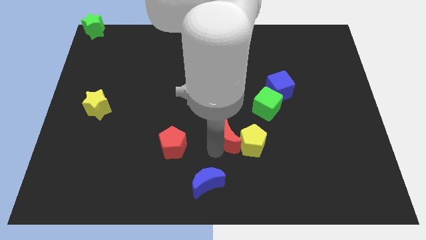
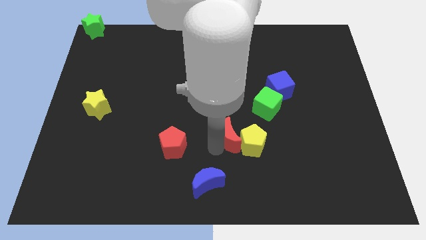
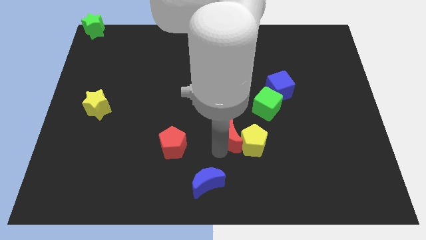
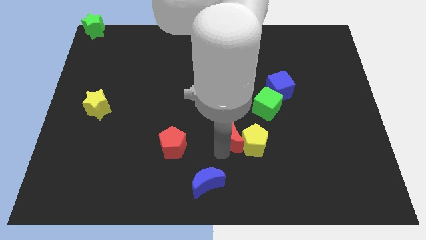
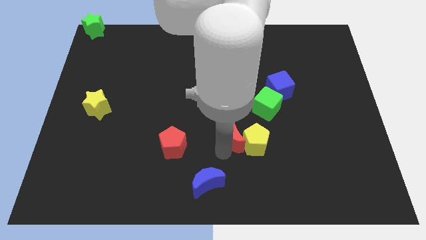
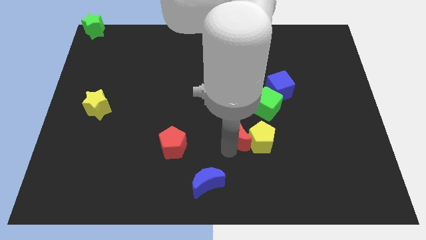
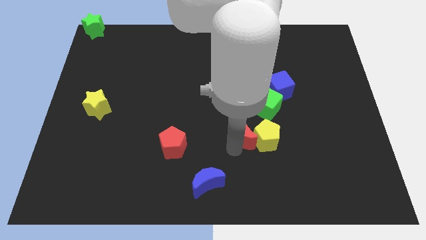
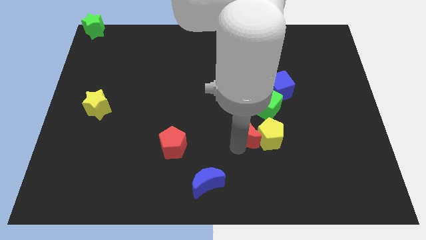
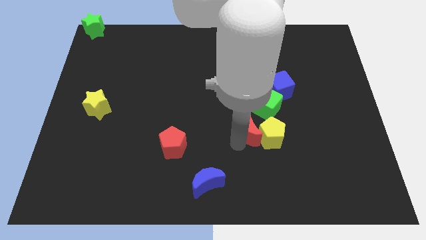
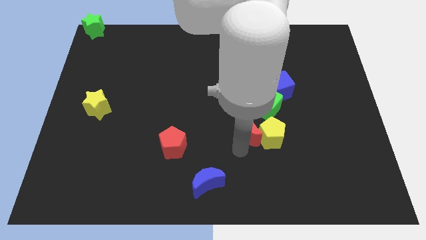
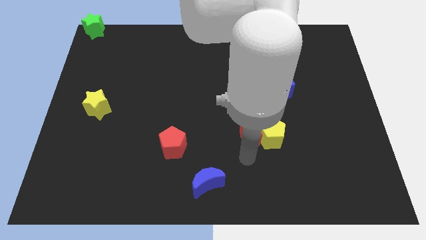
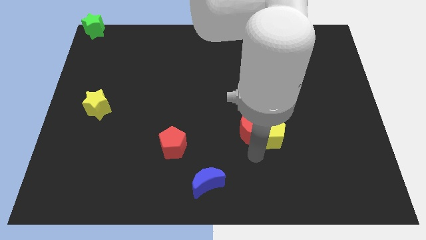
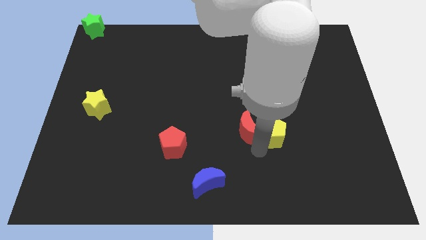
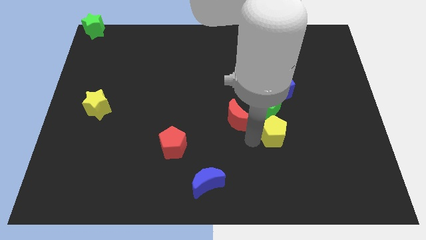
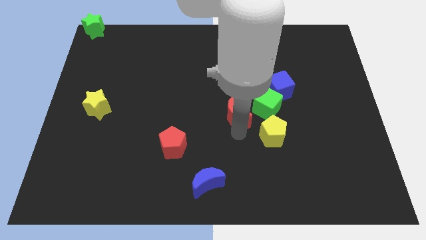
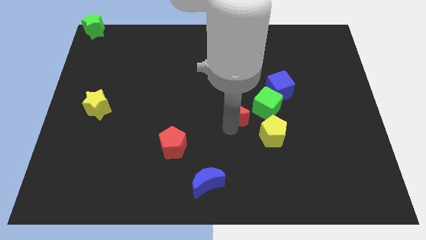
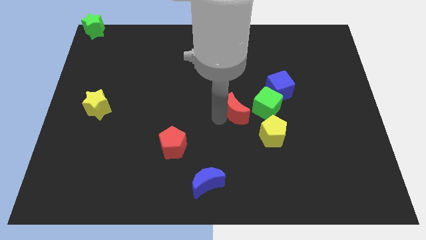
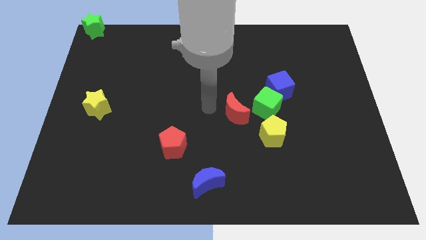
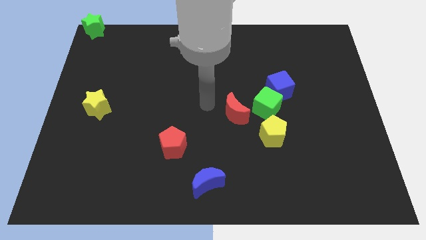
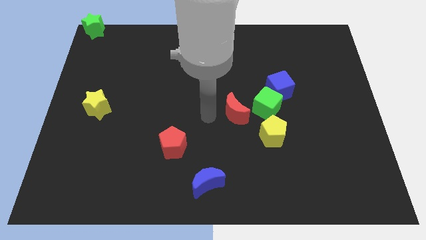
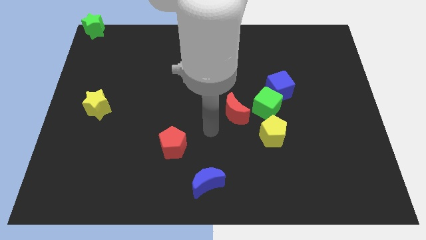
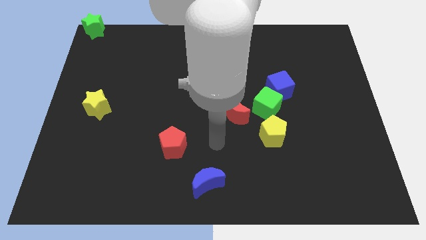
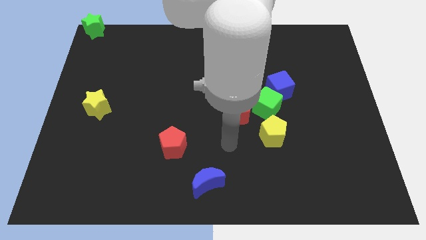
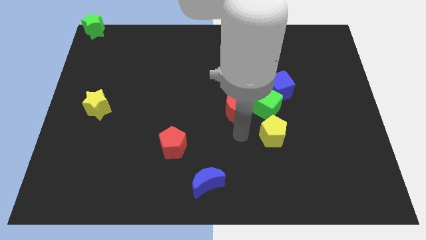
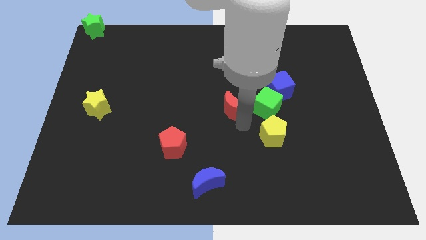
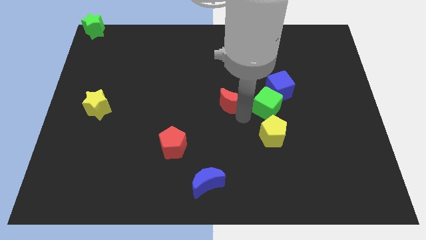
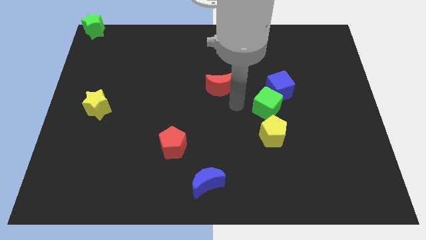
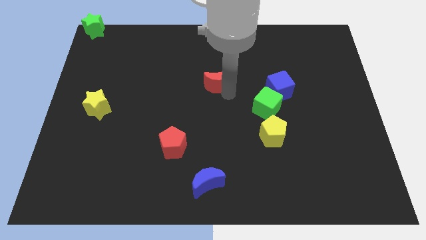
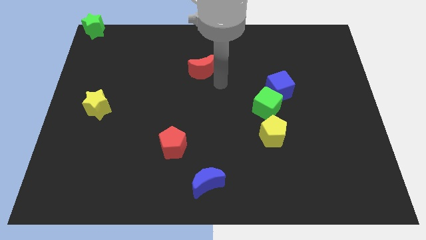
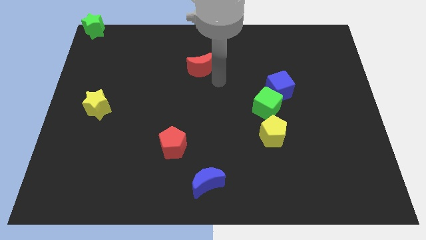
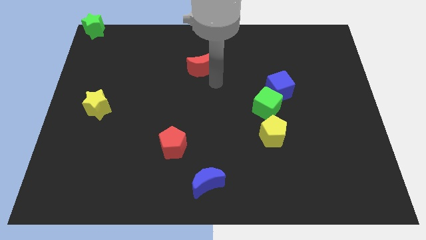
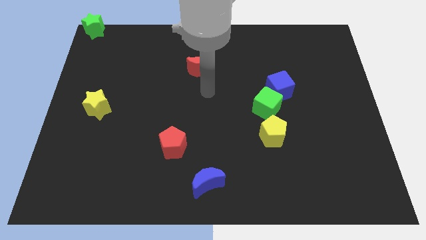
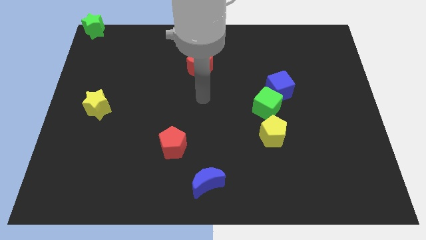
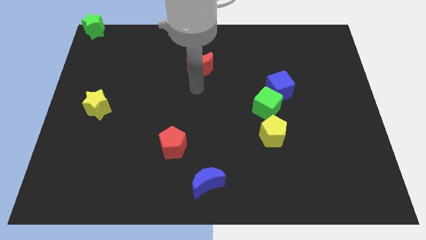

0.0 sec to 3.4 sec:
separate red moon from the yellow pentagon

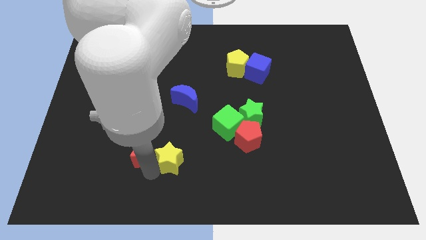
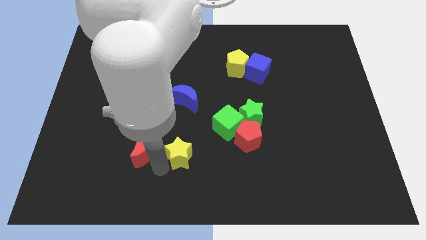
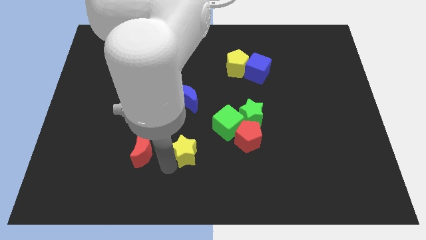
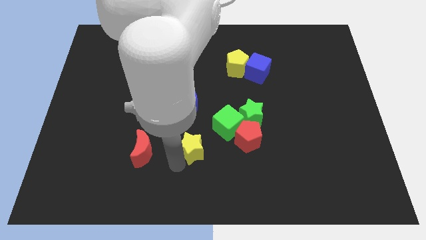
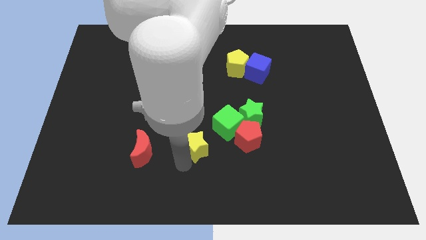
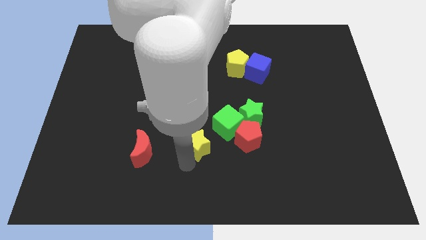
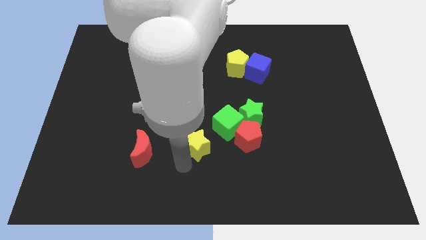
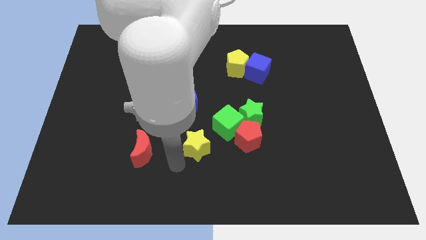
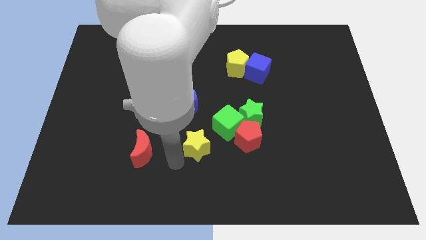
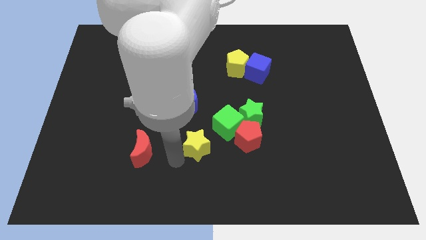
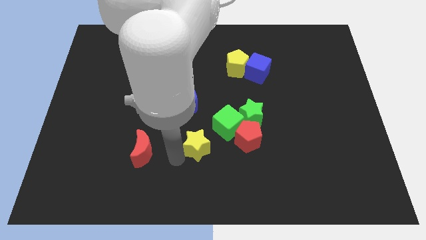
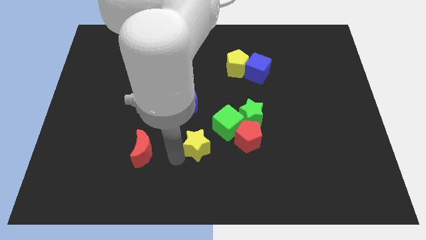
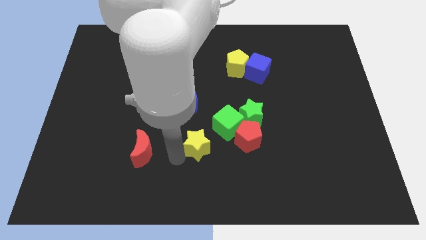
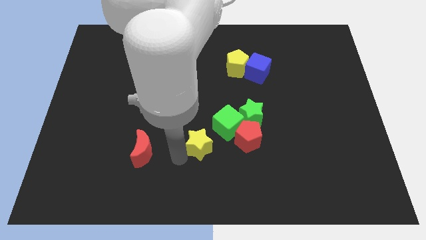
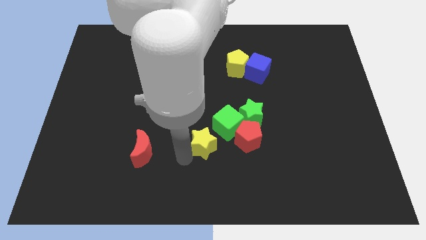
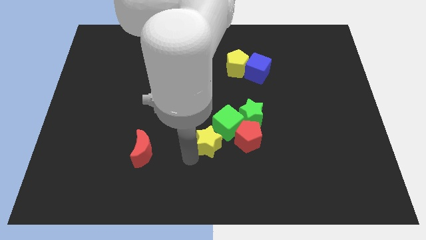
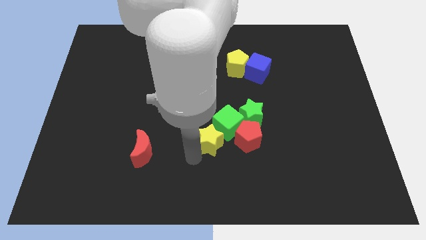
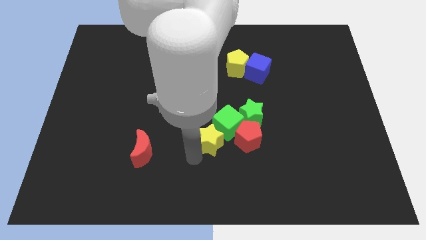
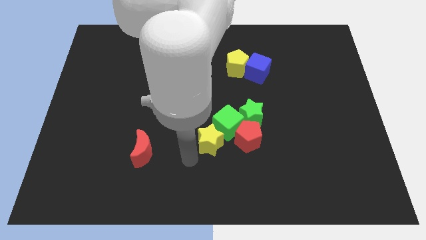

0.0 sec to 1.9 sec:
push the yellow star bottom left of the green cube

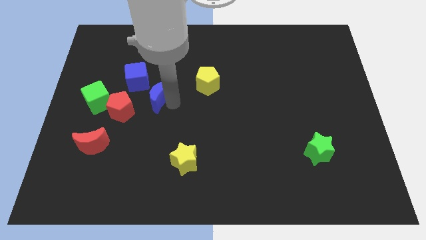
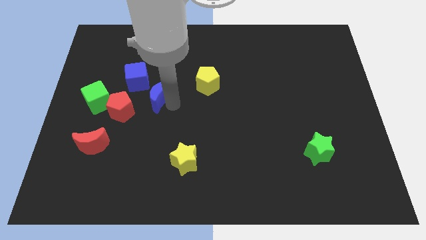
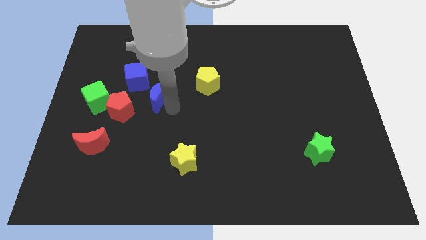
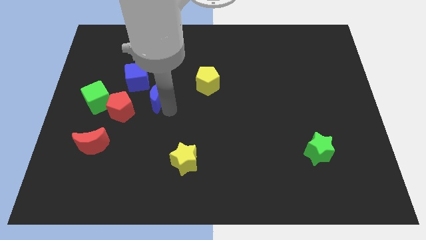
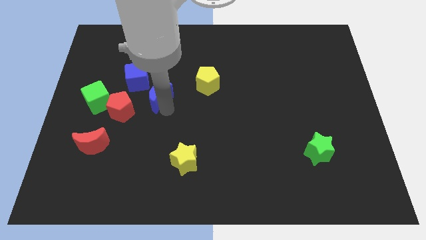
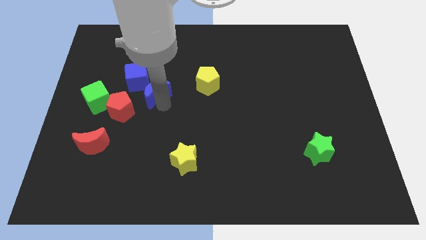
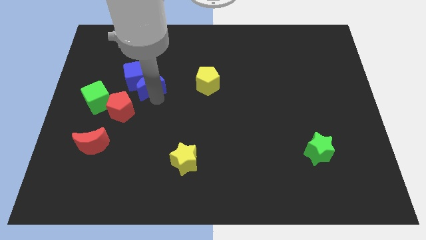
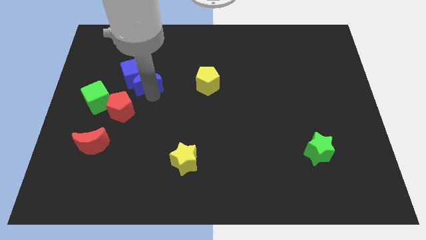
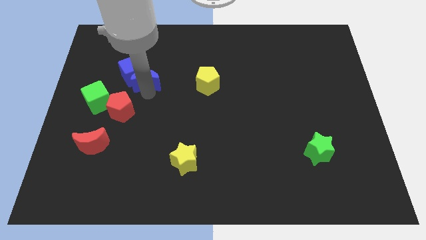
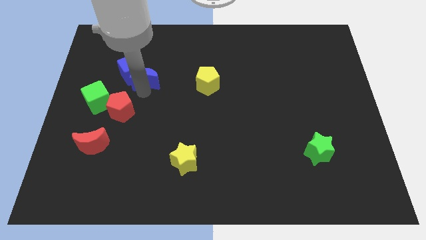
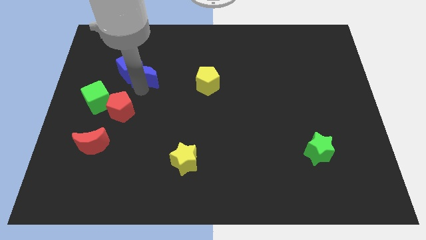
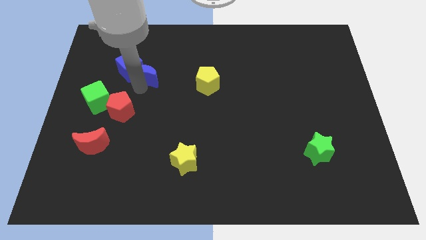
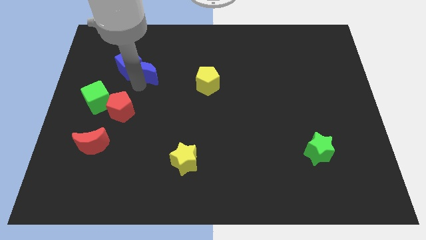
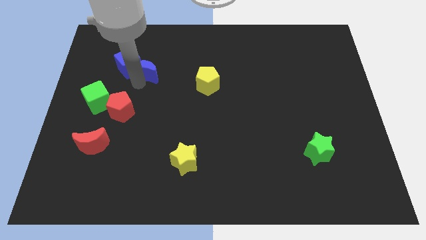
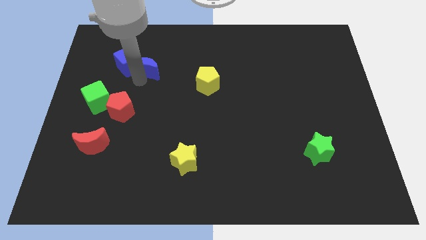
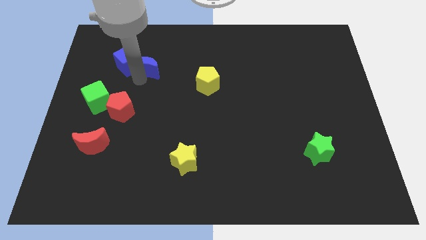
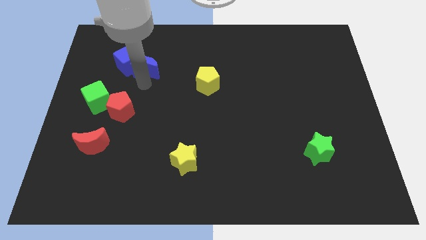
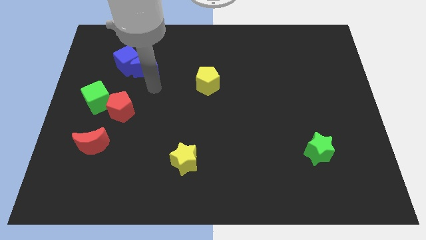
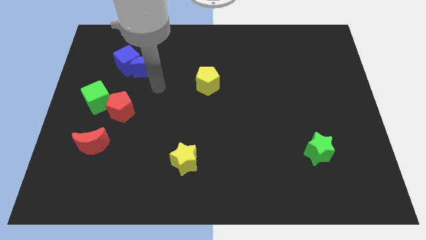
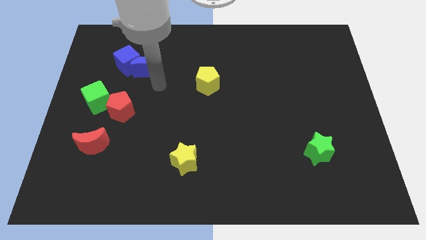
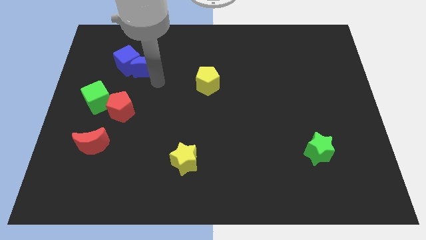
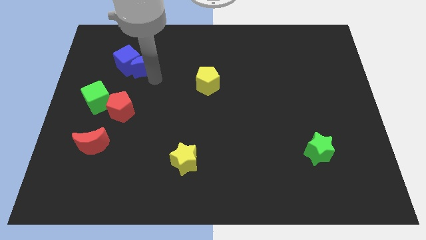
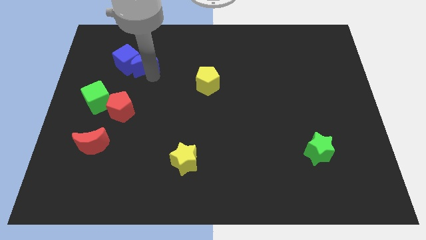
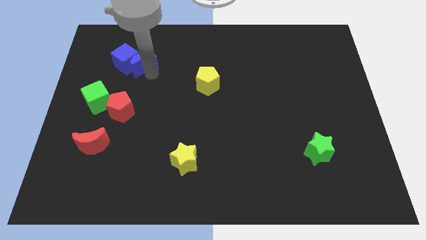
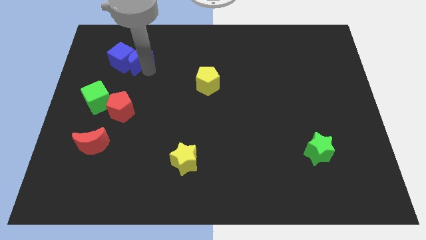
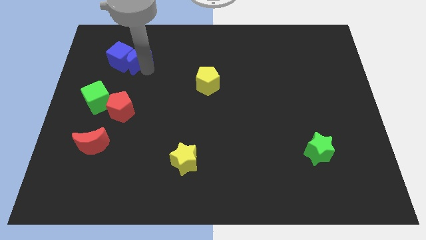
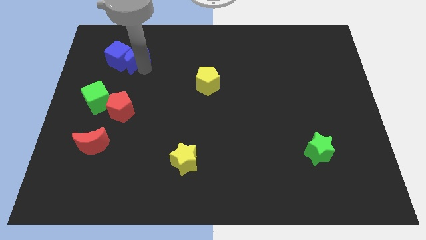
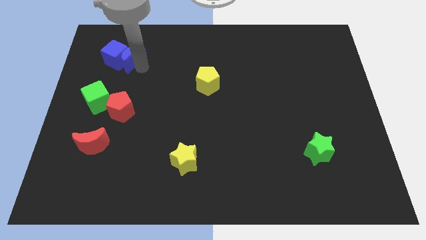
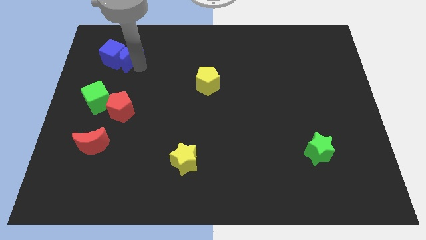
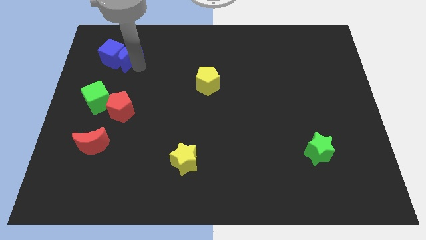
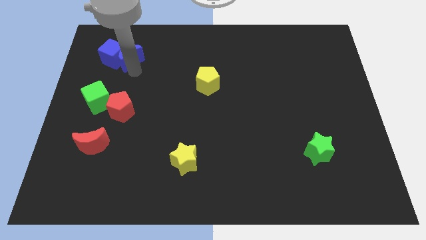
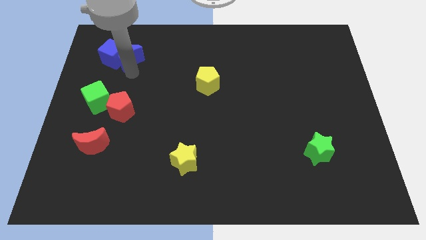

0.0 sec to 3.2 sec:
push the blue cube and blue moon towards top left side

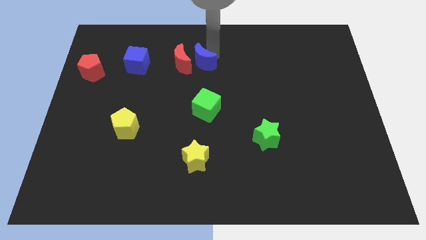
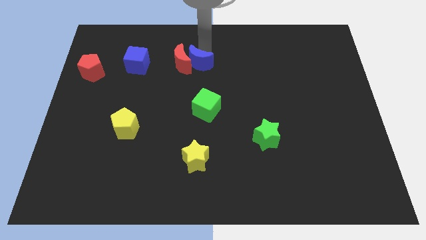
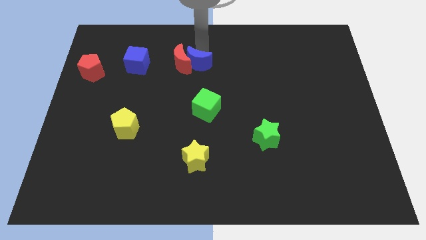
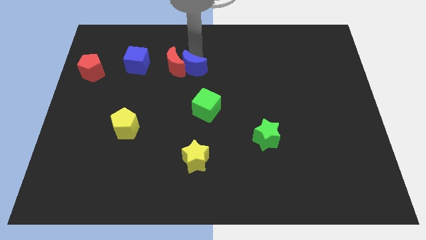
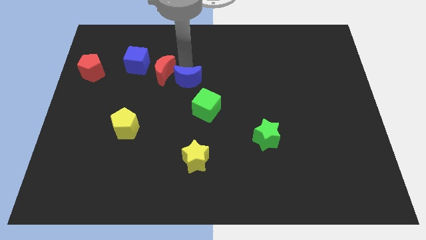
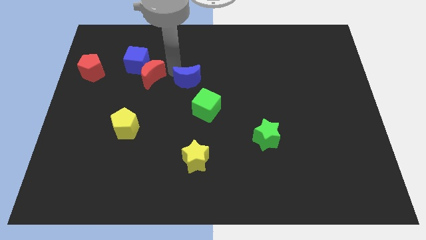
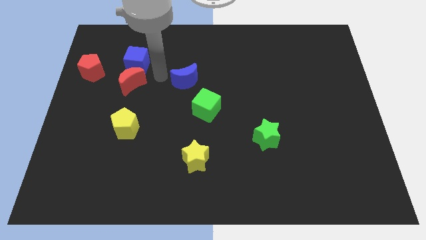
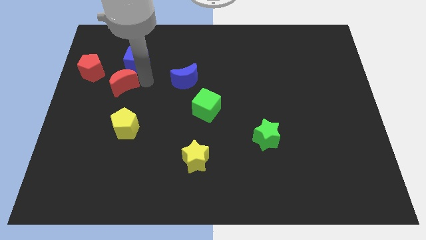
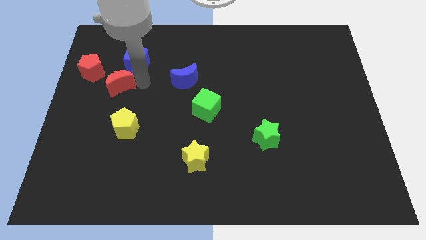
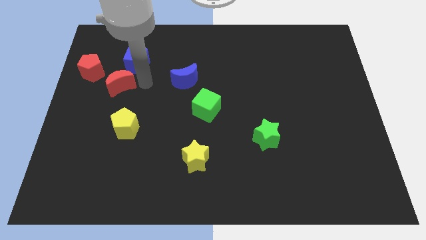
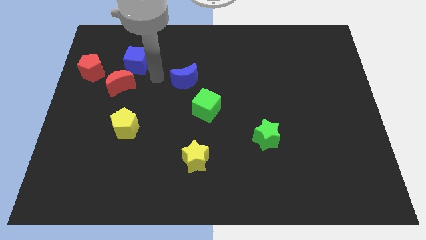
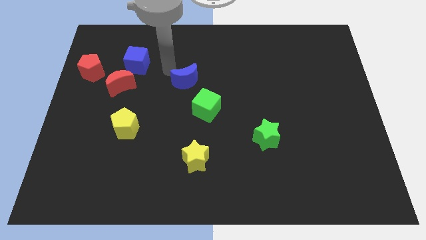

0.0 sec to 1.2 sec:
push blue moon and the red moon away from each other
